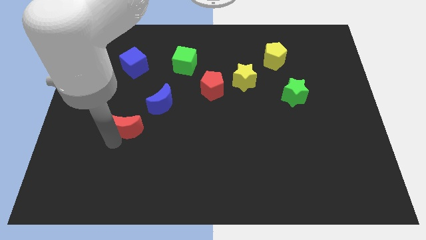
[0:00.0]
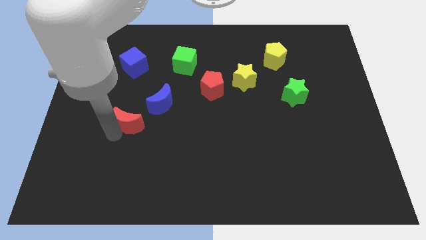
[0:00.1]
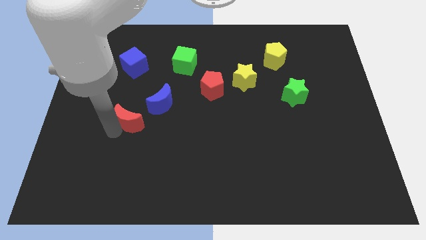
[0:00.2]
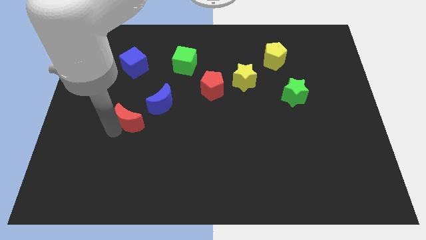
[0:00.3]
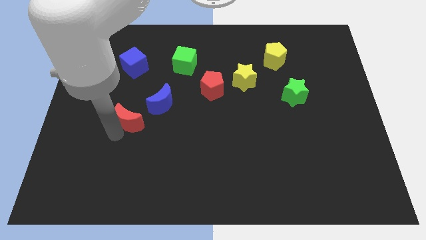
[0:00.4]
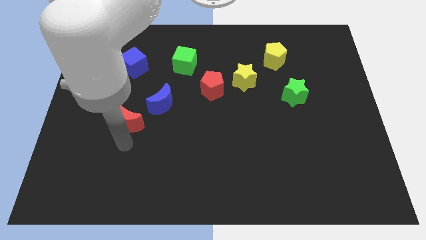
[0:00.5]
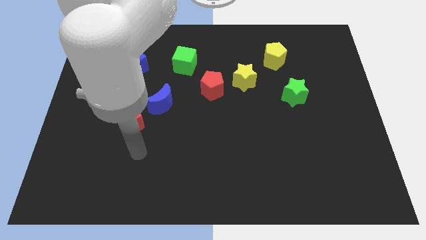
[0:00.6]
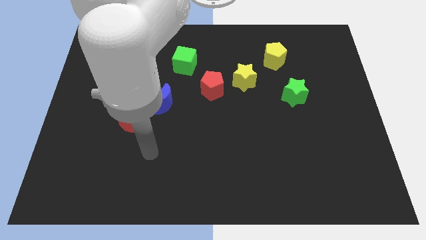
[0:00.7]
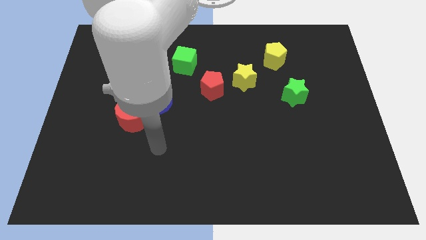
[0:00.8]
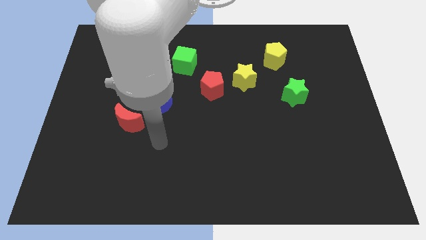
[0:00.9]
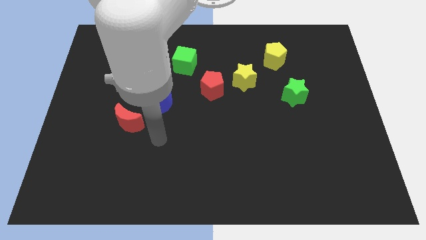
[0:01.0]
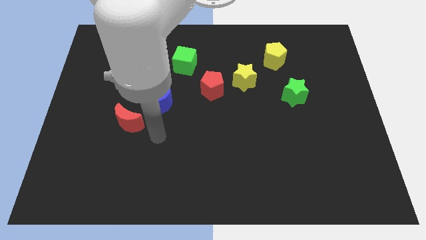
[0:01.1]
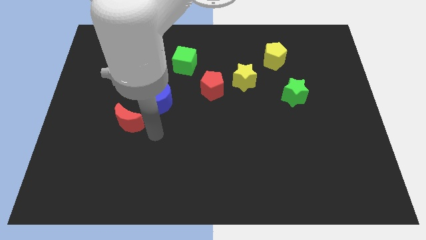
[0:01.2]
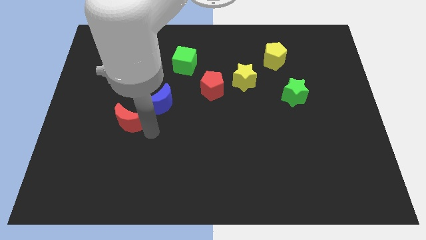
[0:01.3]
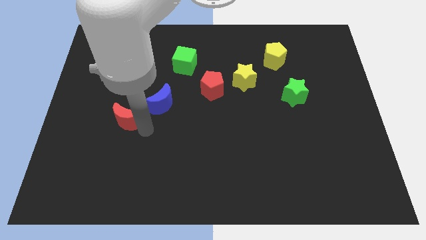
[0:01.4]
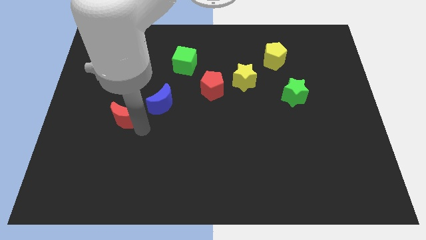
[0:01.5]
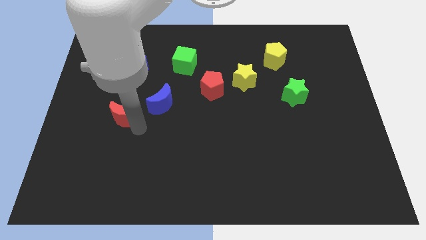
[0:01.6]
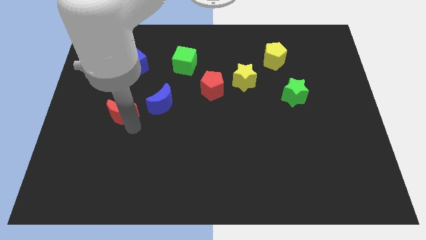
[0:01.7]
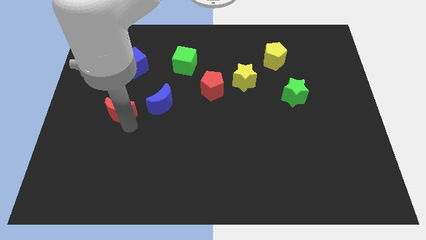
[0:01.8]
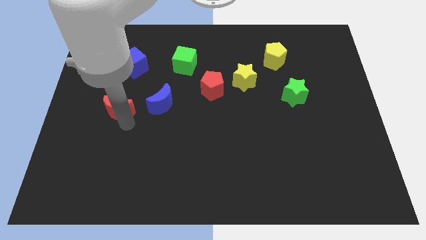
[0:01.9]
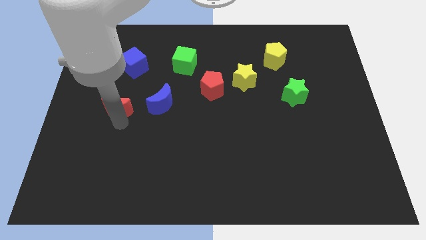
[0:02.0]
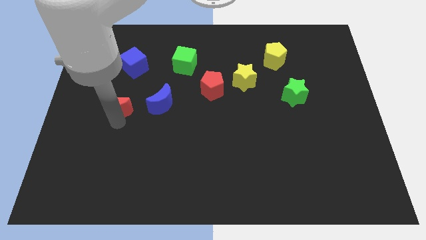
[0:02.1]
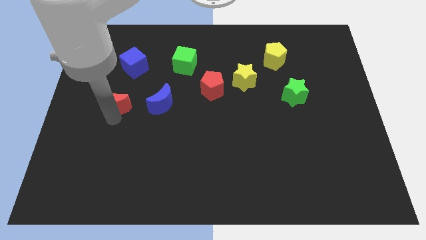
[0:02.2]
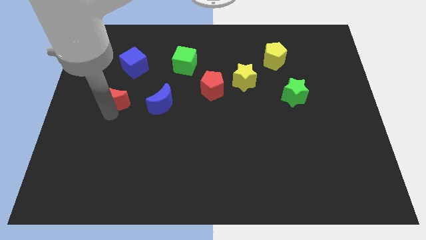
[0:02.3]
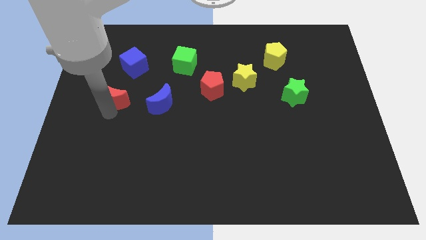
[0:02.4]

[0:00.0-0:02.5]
place the red crescent horizontally to the left side of the blue crescent

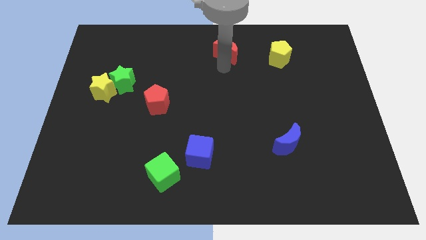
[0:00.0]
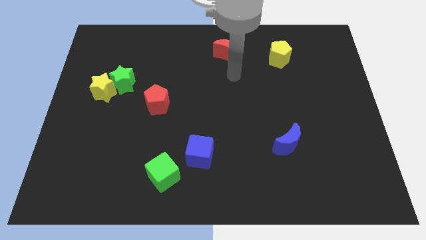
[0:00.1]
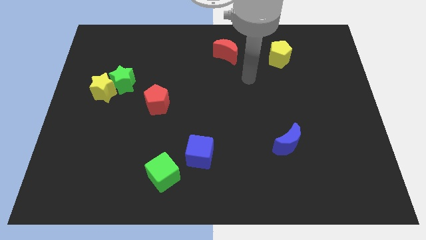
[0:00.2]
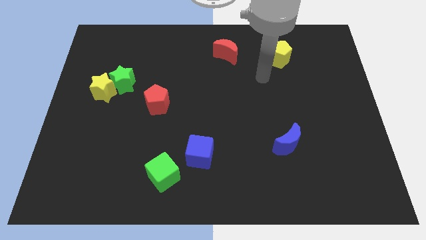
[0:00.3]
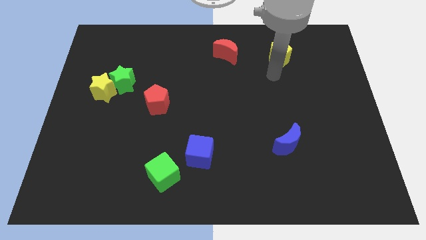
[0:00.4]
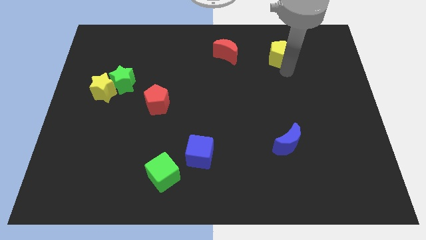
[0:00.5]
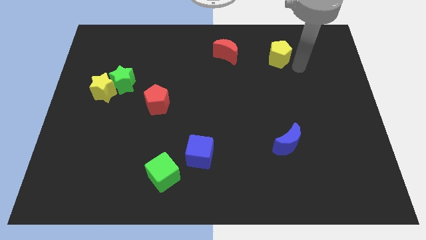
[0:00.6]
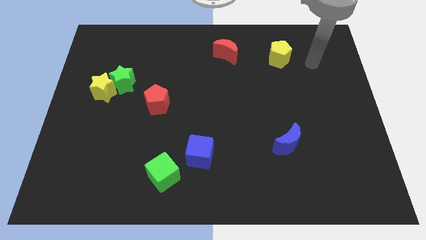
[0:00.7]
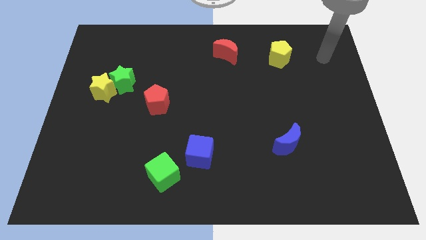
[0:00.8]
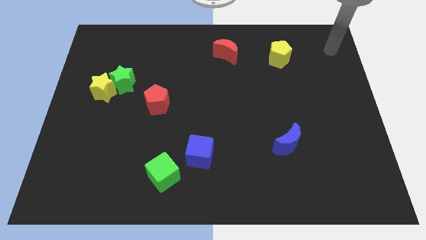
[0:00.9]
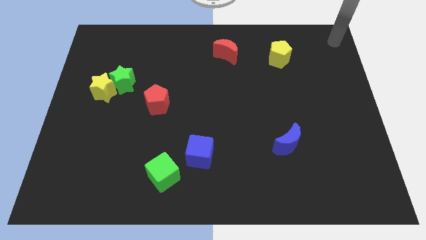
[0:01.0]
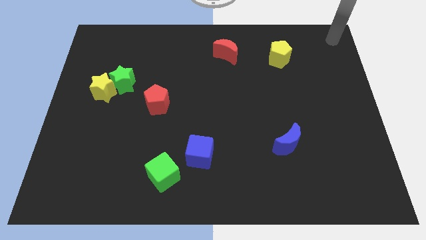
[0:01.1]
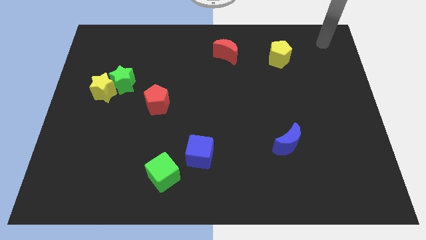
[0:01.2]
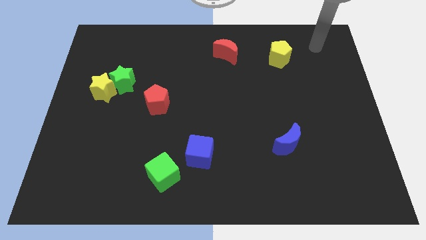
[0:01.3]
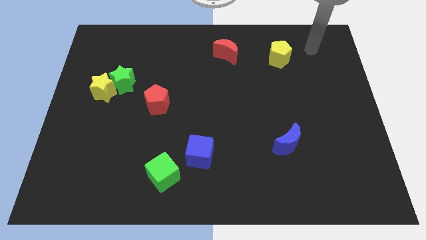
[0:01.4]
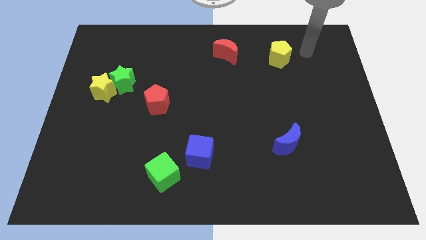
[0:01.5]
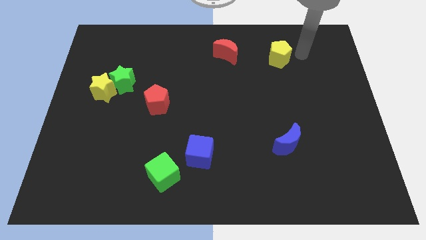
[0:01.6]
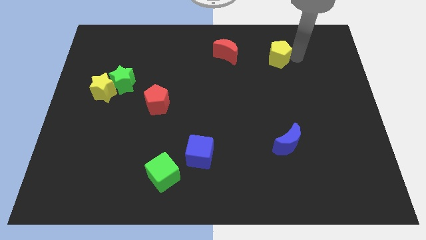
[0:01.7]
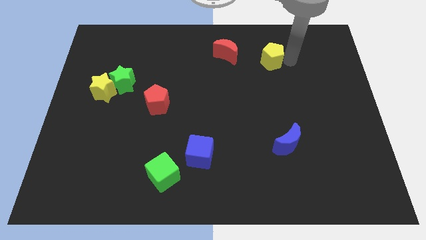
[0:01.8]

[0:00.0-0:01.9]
move the yellow pentagon towards red crescent

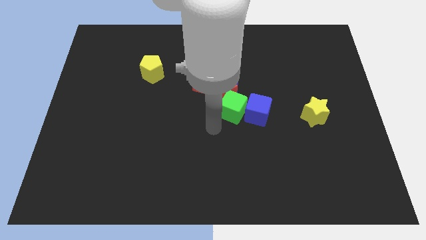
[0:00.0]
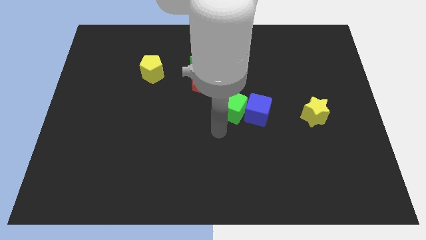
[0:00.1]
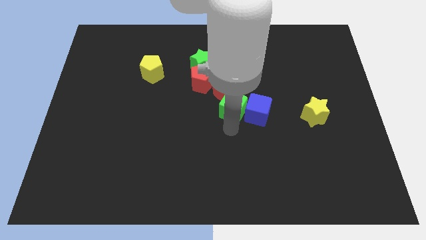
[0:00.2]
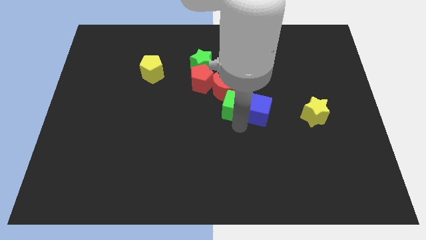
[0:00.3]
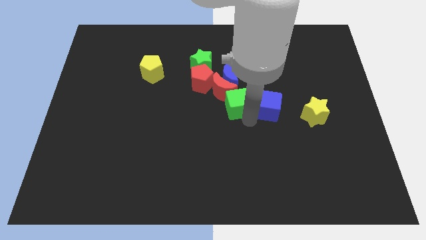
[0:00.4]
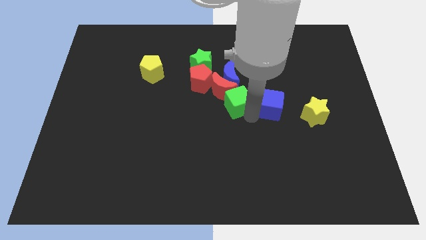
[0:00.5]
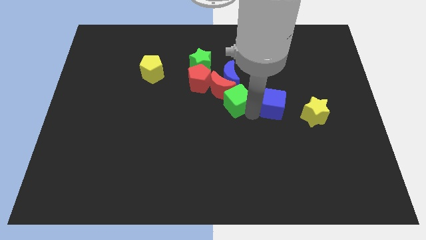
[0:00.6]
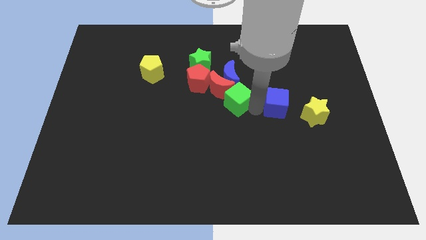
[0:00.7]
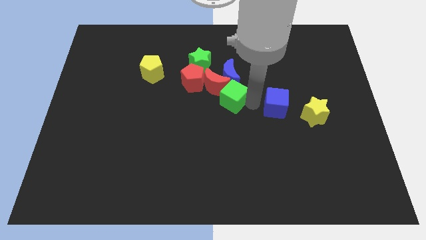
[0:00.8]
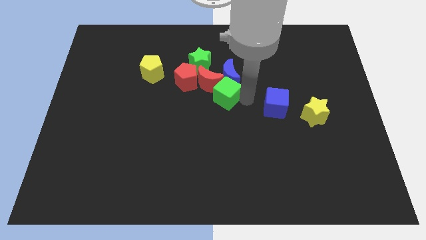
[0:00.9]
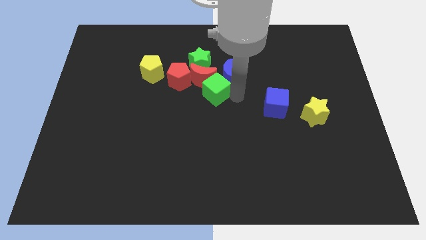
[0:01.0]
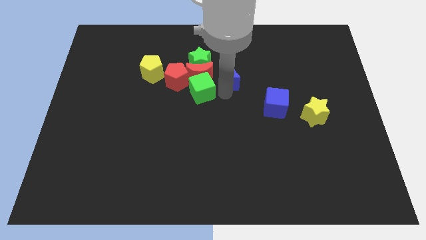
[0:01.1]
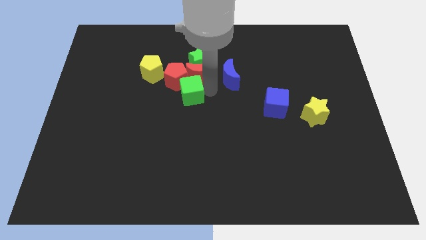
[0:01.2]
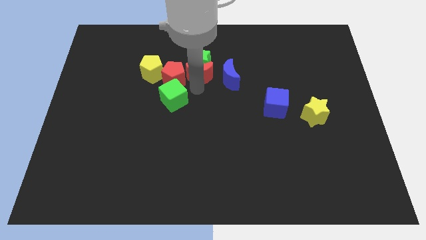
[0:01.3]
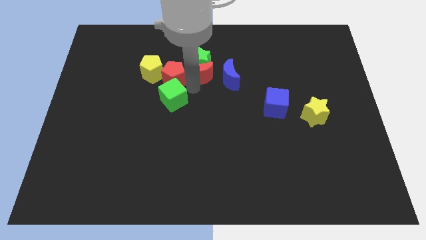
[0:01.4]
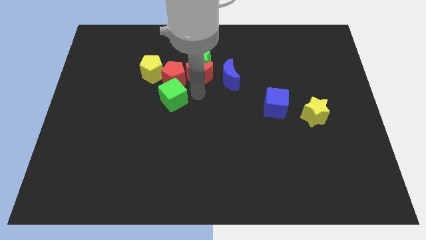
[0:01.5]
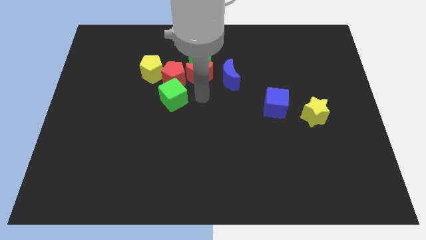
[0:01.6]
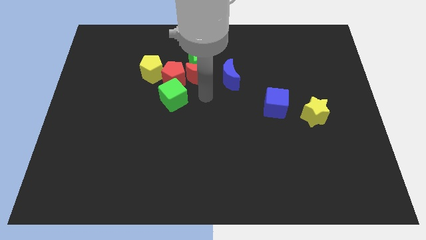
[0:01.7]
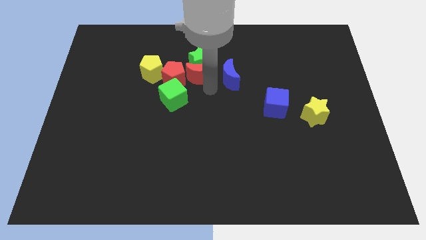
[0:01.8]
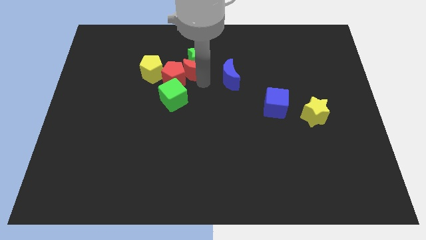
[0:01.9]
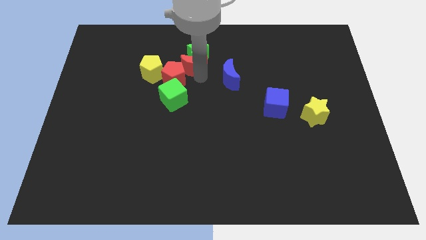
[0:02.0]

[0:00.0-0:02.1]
separate green cube from blue cube

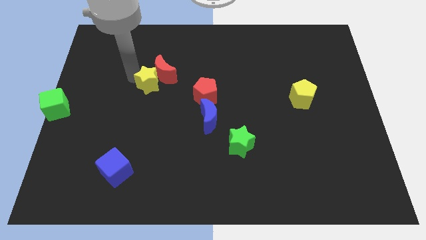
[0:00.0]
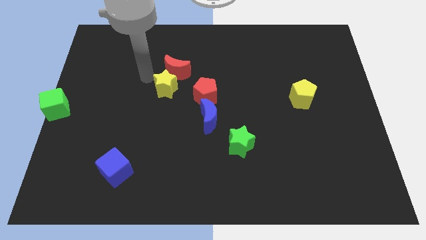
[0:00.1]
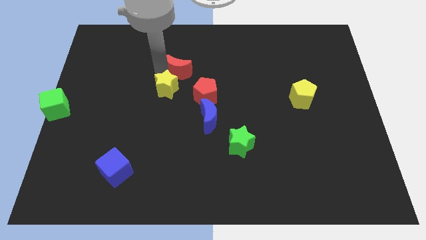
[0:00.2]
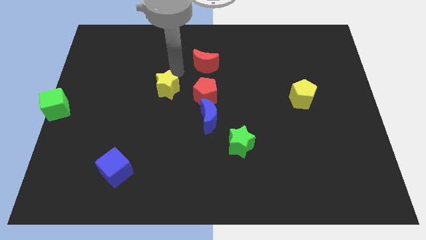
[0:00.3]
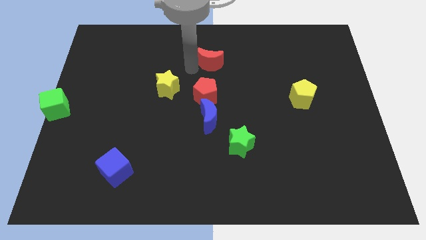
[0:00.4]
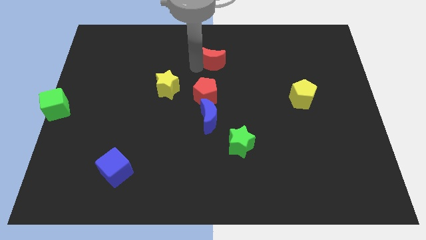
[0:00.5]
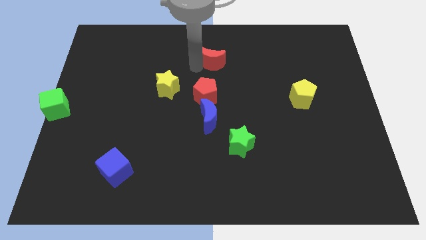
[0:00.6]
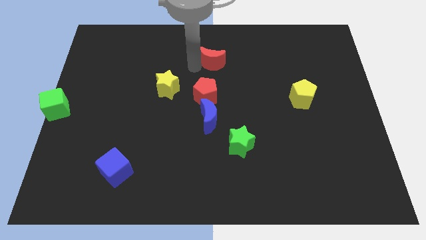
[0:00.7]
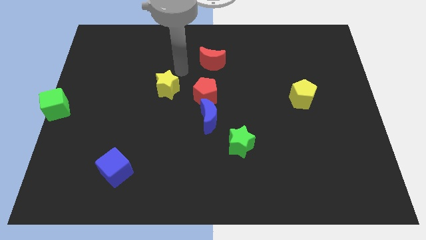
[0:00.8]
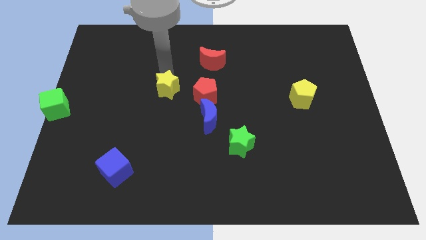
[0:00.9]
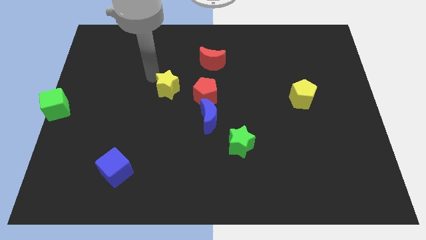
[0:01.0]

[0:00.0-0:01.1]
push the red crescent to the top of the red pentagon

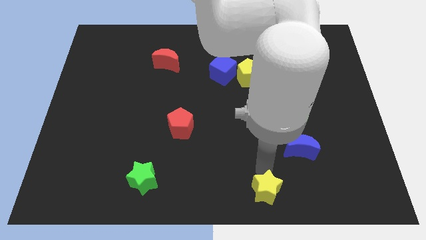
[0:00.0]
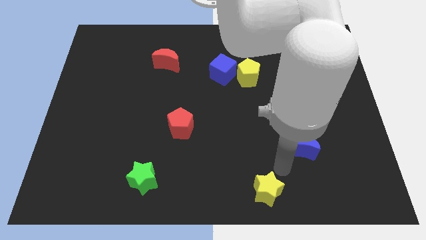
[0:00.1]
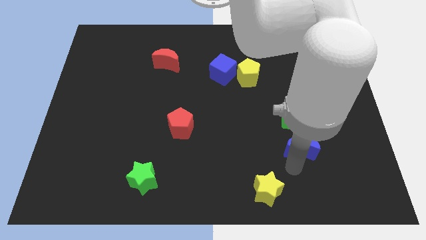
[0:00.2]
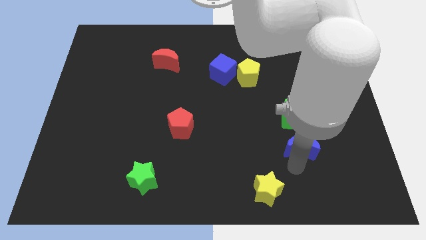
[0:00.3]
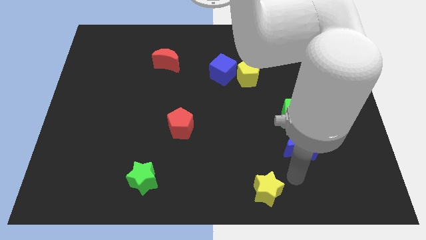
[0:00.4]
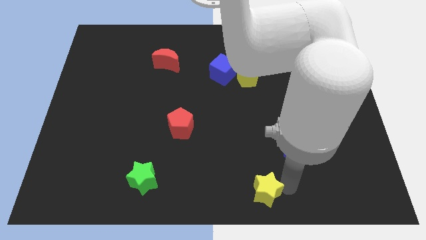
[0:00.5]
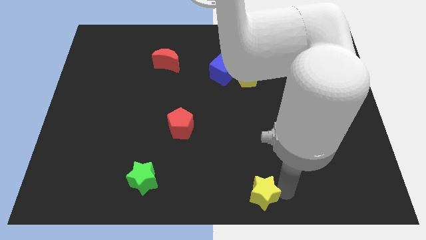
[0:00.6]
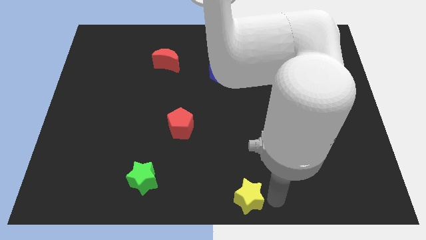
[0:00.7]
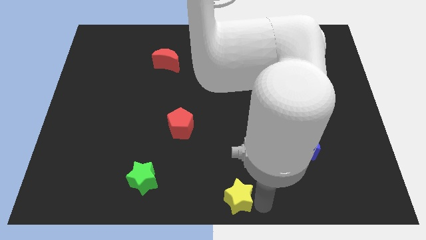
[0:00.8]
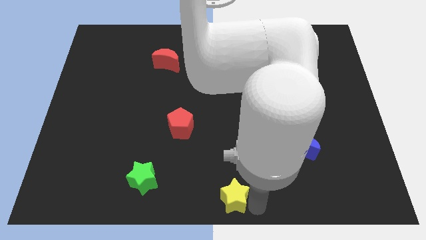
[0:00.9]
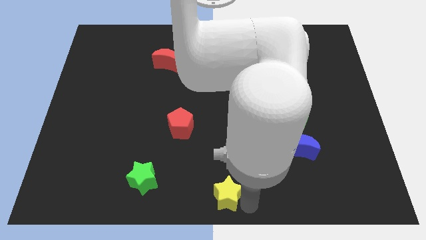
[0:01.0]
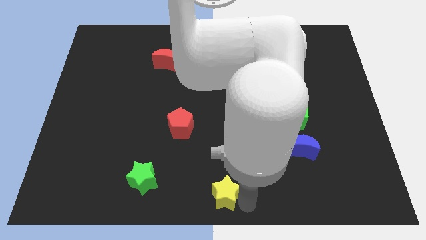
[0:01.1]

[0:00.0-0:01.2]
push the yellow star to the bottom center of the board

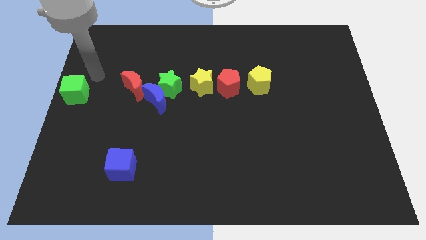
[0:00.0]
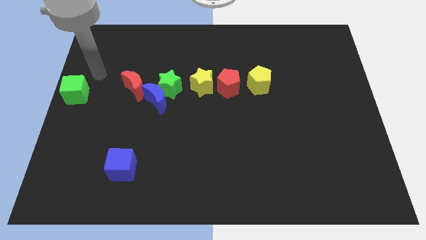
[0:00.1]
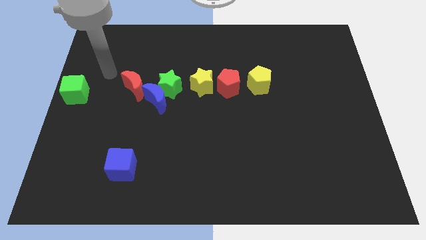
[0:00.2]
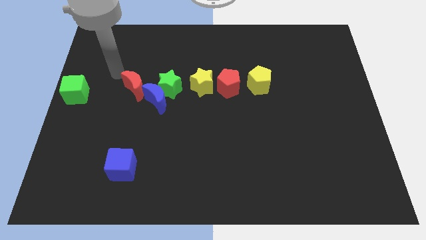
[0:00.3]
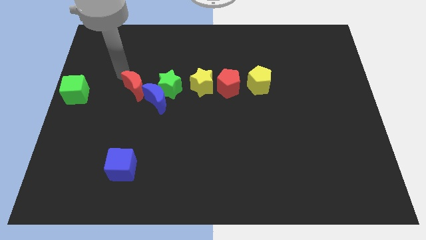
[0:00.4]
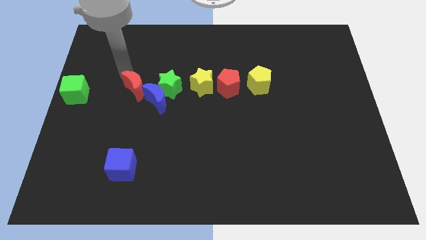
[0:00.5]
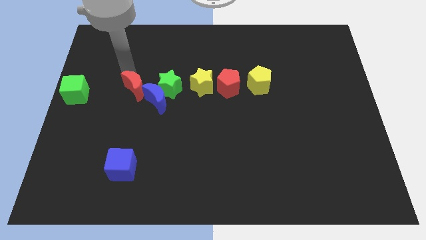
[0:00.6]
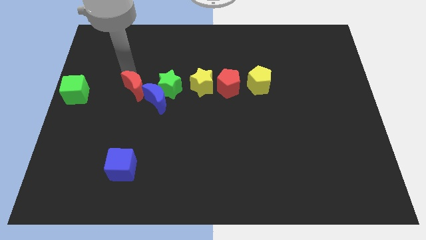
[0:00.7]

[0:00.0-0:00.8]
point your arm at the top of the red crescent
